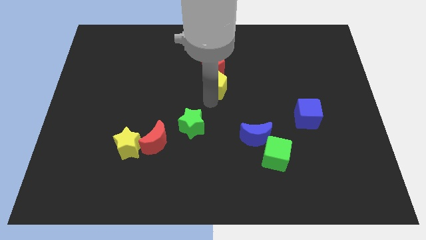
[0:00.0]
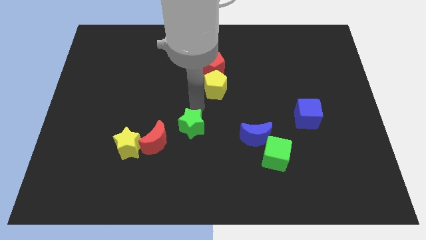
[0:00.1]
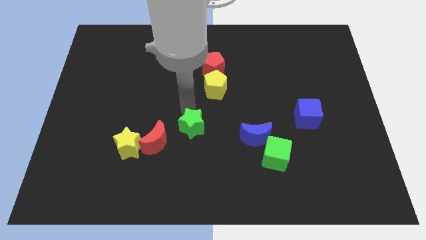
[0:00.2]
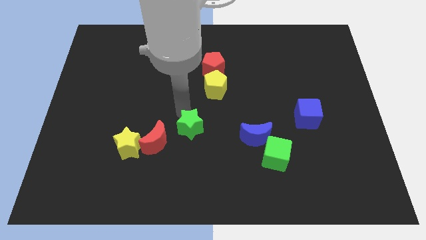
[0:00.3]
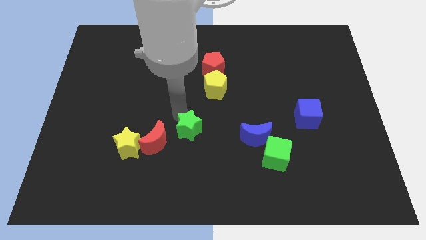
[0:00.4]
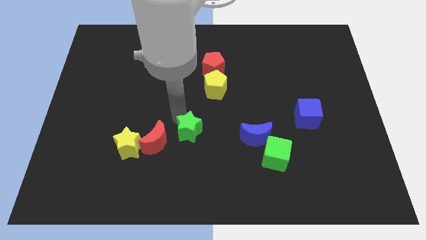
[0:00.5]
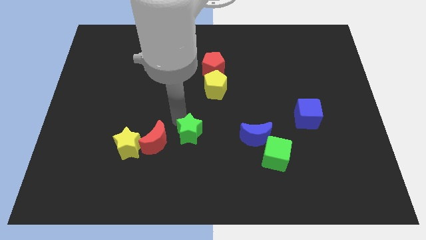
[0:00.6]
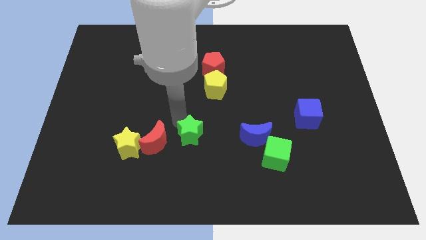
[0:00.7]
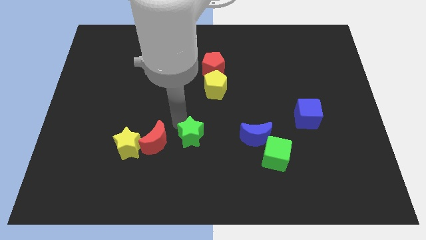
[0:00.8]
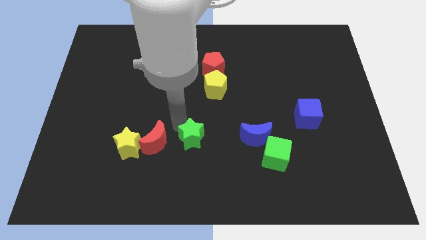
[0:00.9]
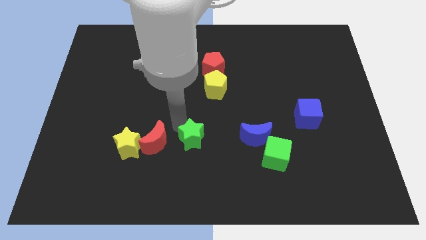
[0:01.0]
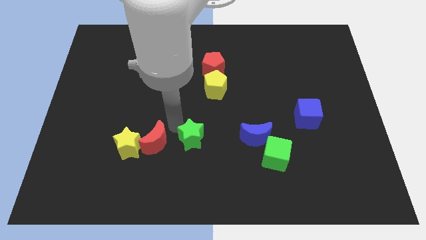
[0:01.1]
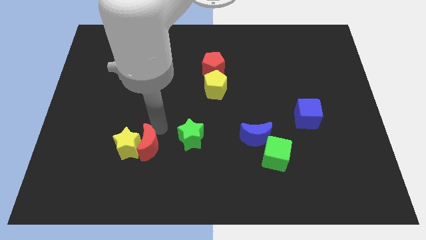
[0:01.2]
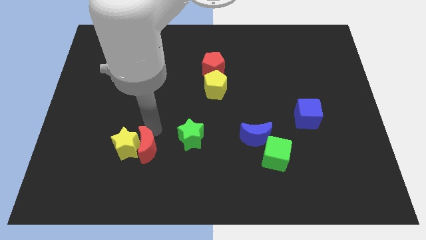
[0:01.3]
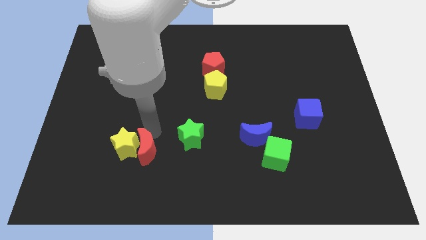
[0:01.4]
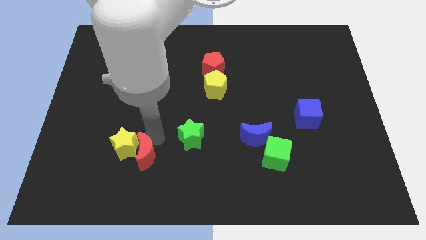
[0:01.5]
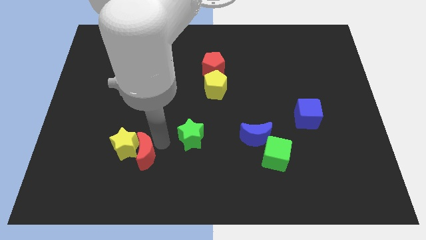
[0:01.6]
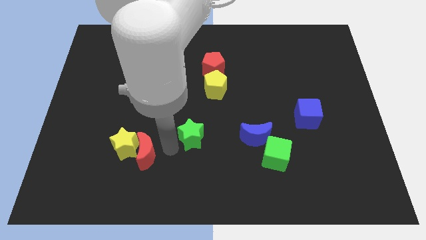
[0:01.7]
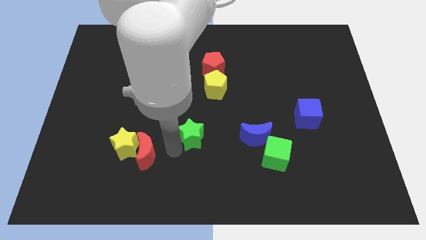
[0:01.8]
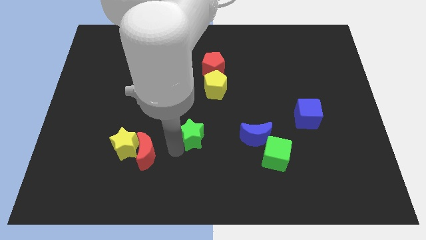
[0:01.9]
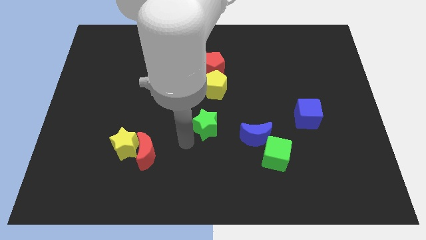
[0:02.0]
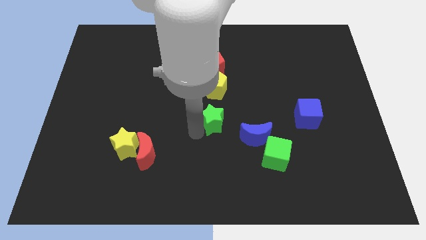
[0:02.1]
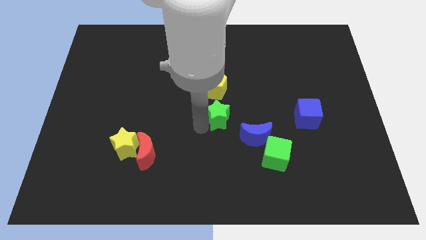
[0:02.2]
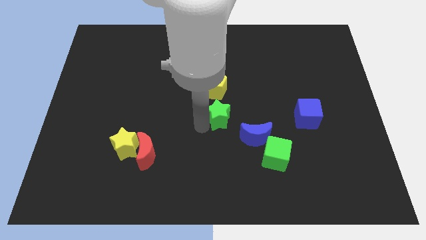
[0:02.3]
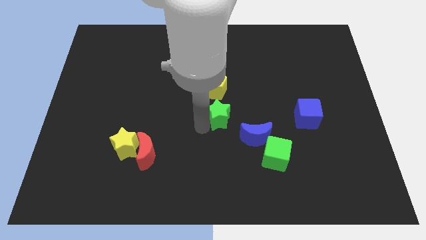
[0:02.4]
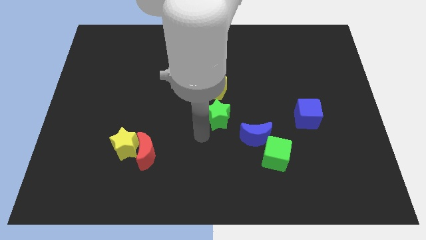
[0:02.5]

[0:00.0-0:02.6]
place the green star to the bottom of yellow pentagon

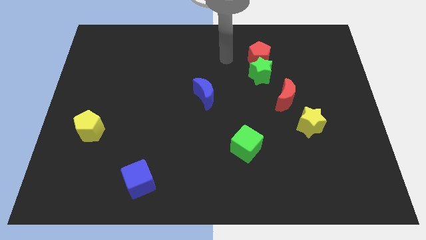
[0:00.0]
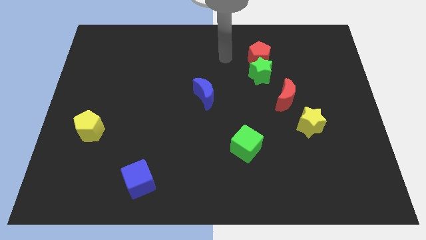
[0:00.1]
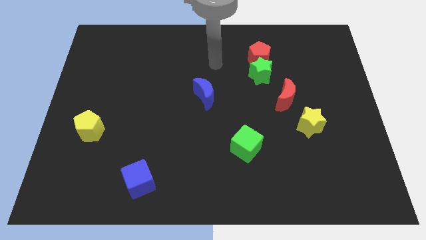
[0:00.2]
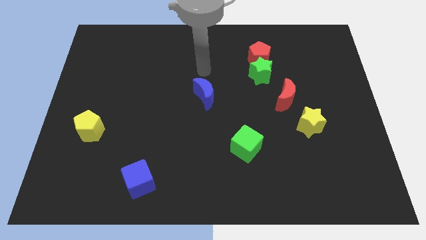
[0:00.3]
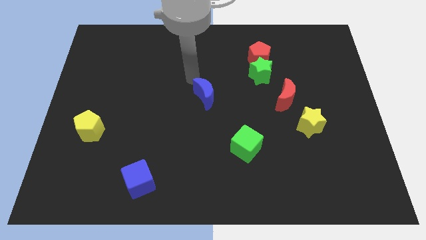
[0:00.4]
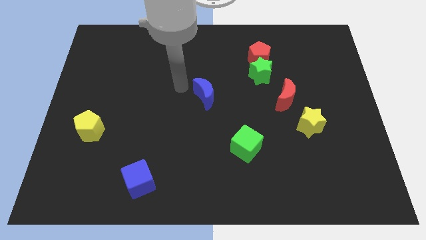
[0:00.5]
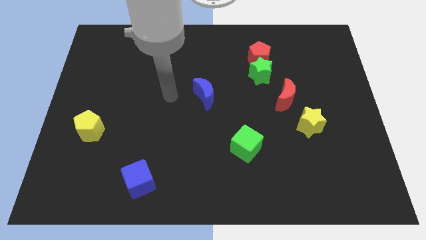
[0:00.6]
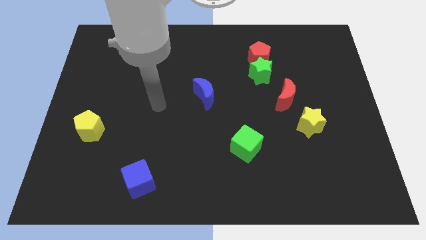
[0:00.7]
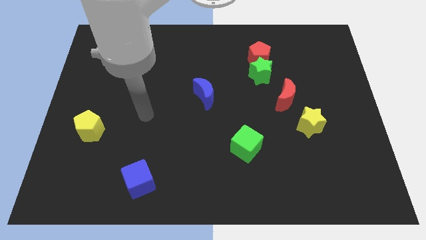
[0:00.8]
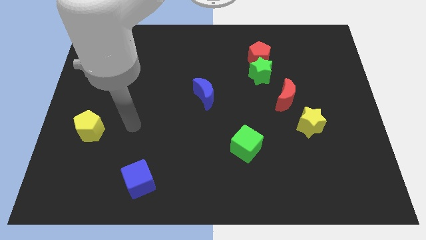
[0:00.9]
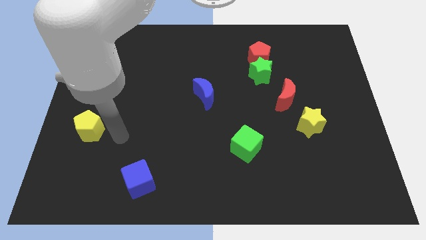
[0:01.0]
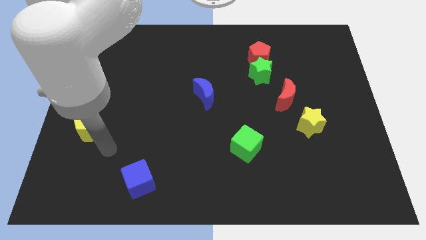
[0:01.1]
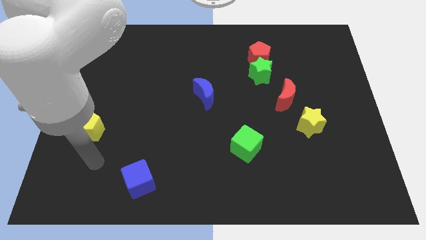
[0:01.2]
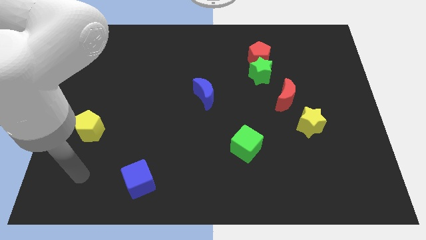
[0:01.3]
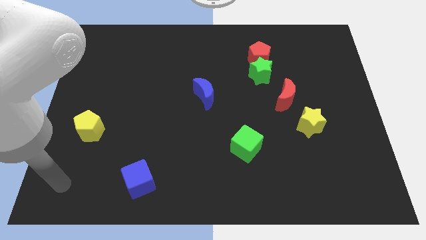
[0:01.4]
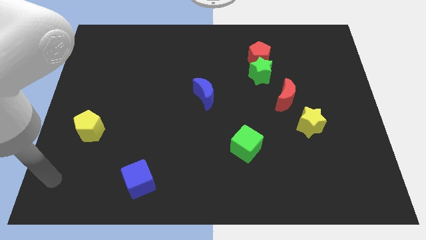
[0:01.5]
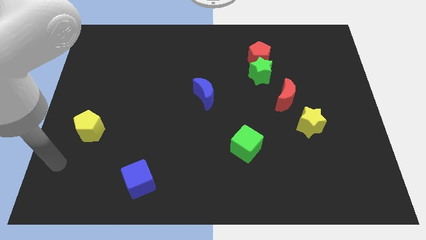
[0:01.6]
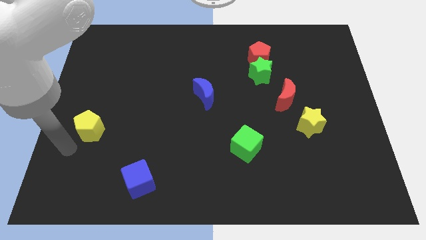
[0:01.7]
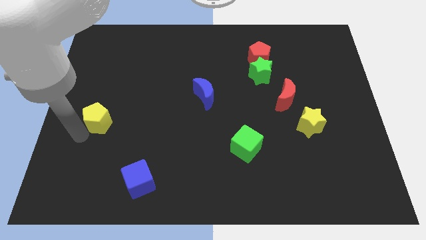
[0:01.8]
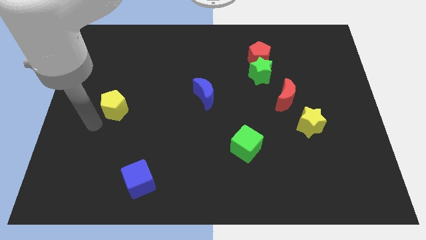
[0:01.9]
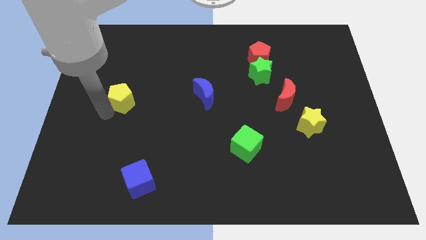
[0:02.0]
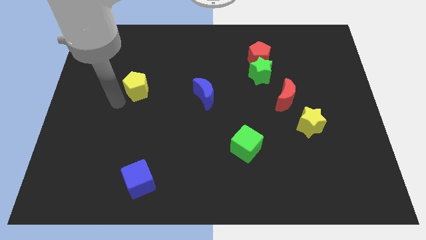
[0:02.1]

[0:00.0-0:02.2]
place the yellow pentagon diagonal to the left of the blue moon

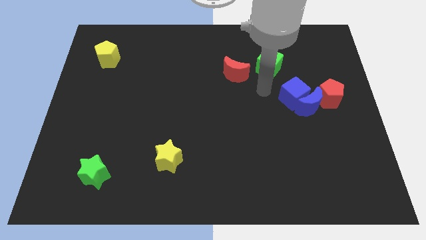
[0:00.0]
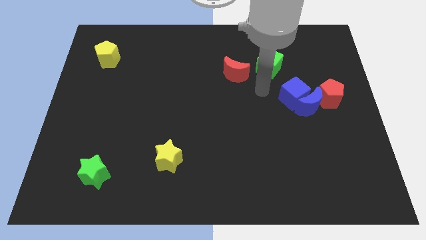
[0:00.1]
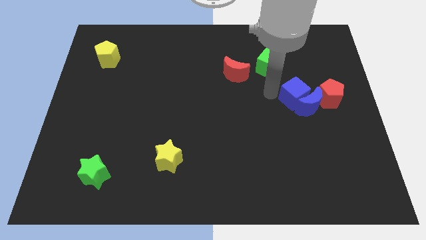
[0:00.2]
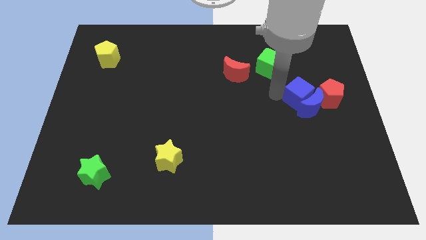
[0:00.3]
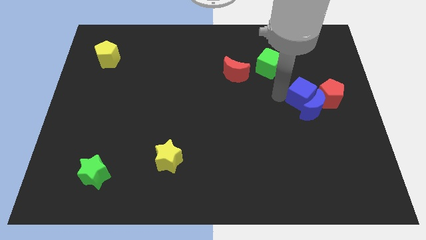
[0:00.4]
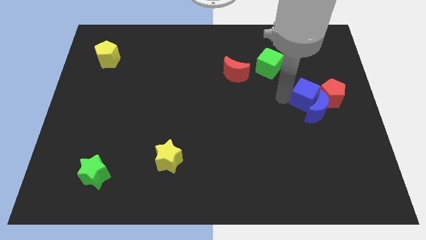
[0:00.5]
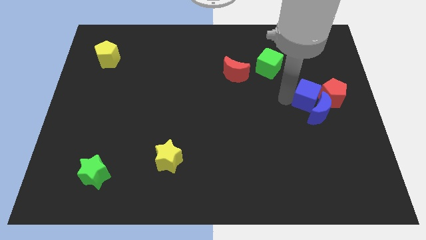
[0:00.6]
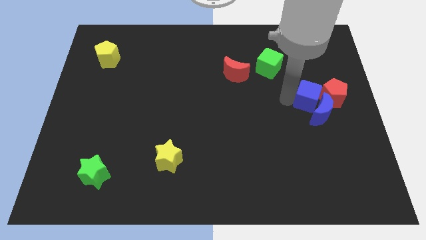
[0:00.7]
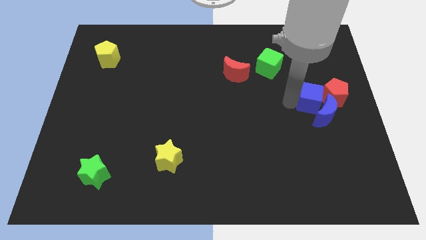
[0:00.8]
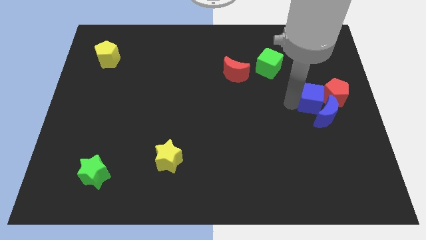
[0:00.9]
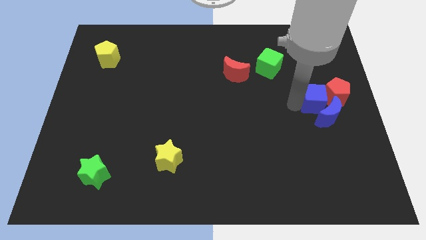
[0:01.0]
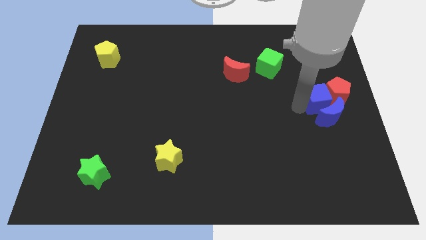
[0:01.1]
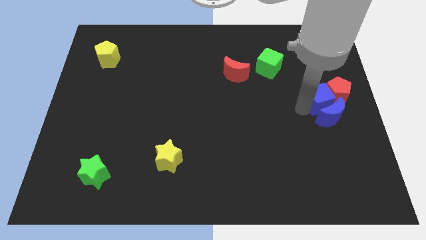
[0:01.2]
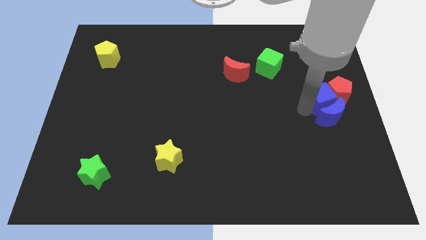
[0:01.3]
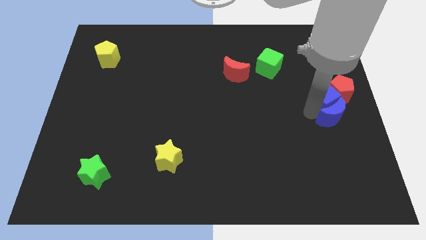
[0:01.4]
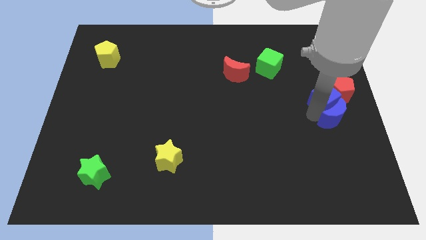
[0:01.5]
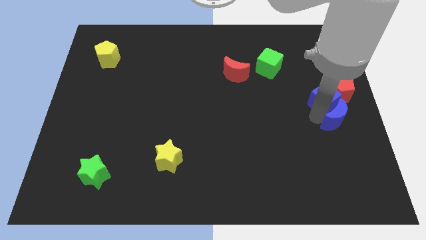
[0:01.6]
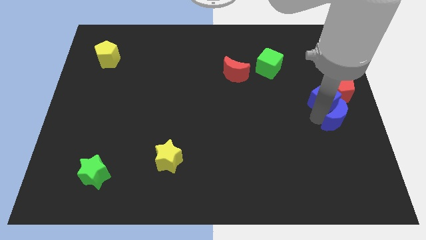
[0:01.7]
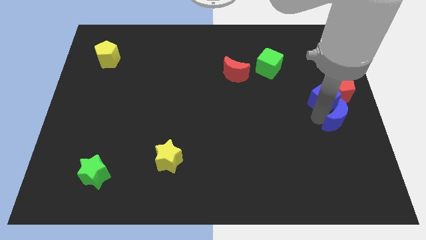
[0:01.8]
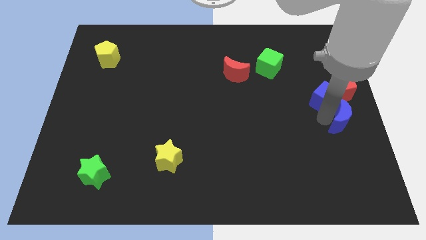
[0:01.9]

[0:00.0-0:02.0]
push the blue cube into the red pentagon

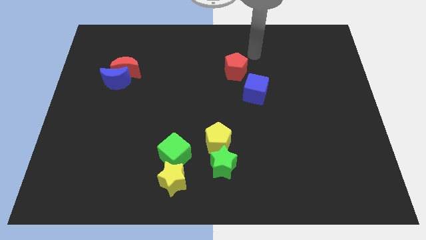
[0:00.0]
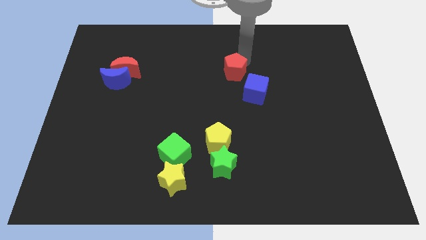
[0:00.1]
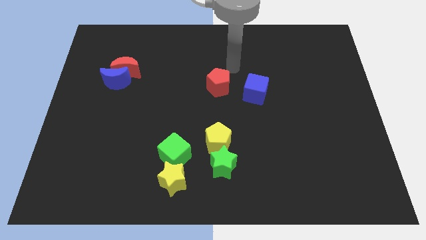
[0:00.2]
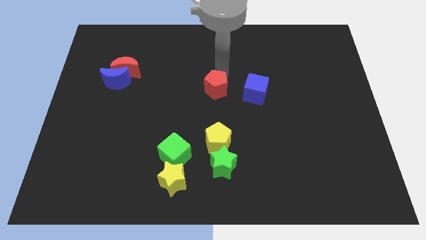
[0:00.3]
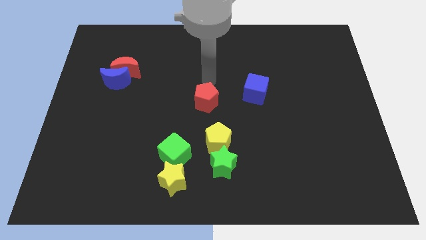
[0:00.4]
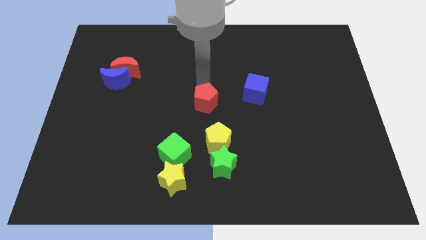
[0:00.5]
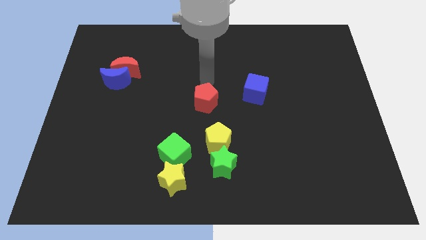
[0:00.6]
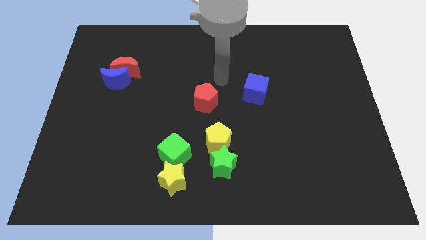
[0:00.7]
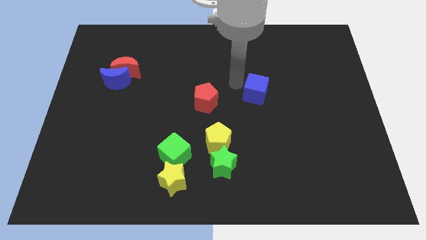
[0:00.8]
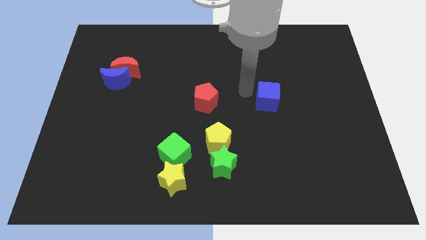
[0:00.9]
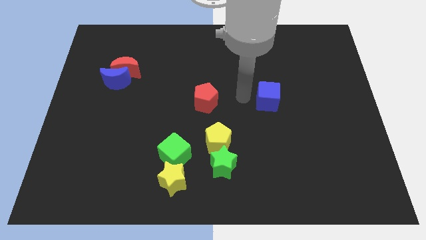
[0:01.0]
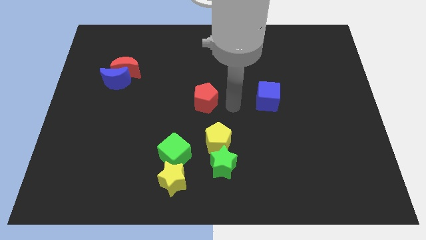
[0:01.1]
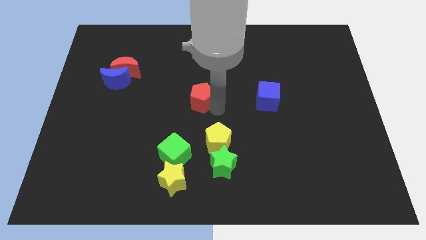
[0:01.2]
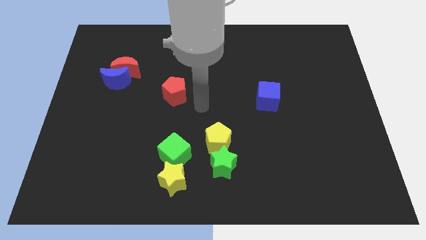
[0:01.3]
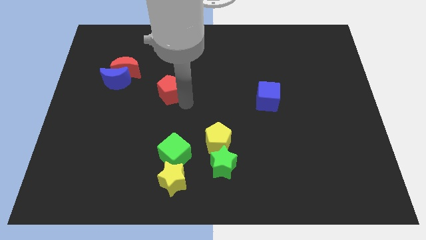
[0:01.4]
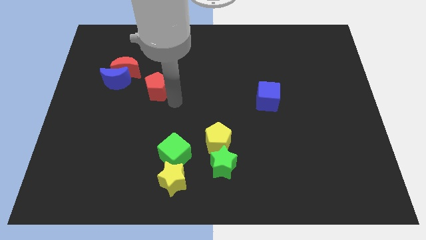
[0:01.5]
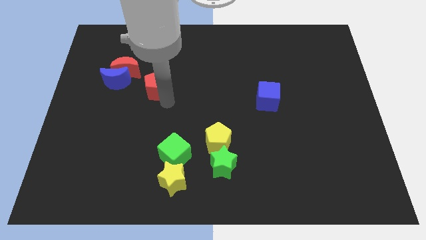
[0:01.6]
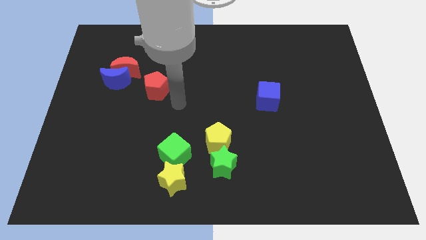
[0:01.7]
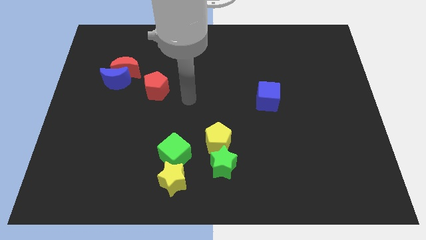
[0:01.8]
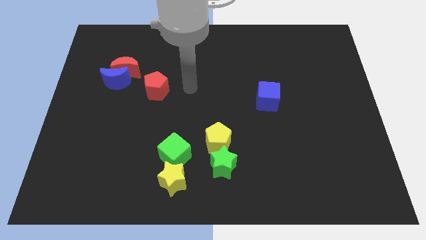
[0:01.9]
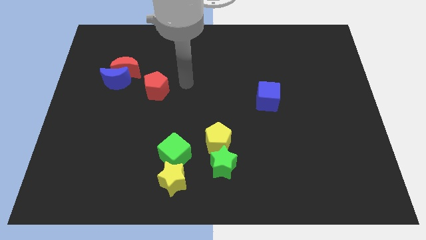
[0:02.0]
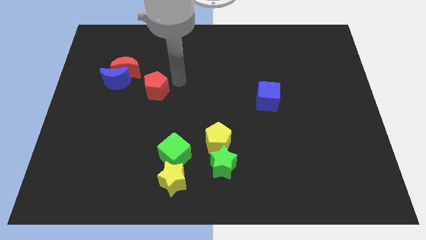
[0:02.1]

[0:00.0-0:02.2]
move the red pentagon diagonal to yellow pentagon

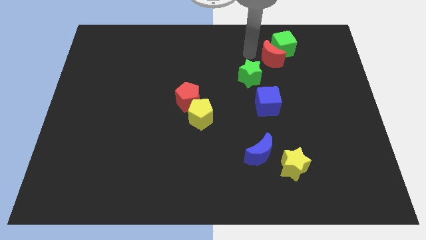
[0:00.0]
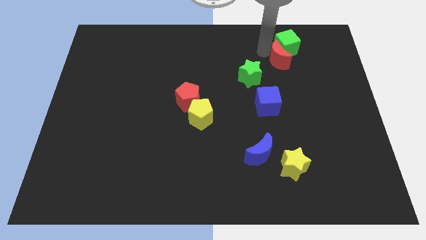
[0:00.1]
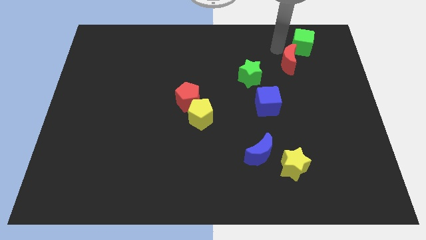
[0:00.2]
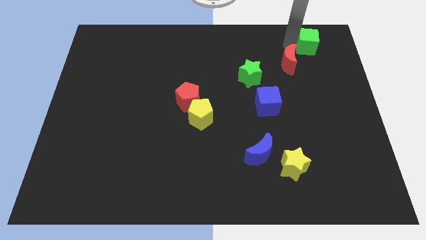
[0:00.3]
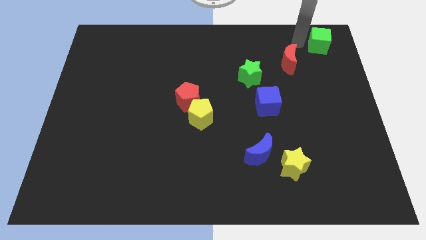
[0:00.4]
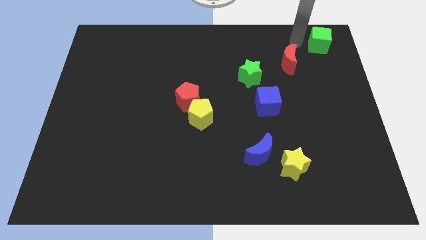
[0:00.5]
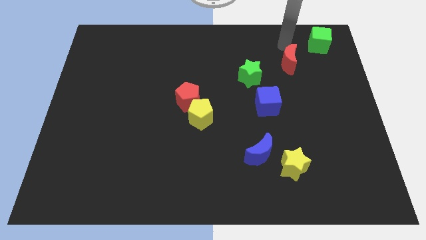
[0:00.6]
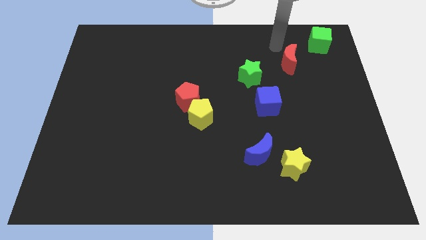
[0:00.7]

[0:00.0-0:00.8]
push the green cube to the top right corner
